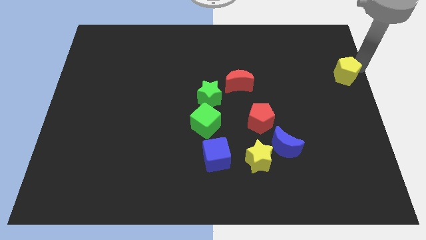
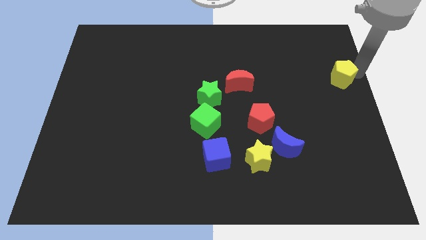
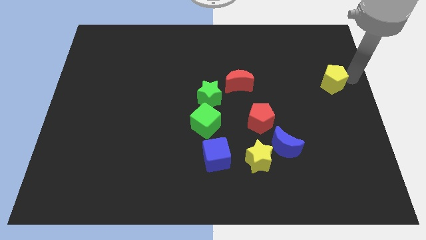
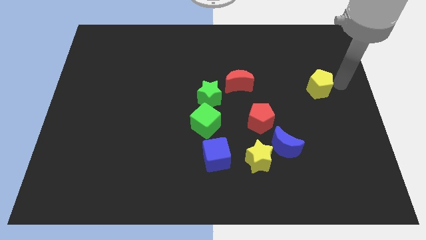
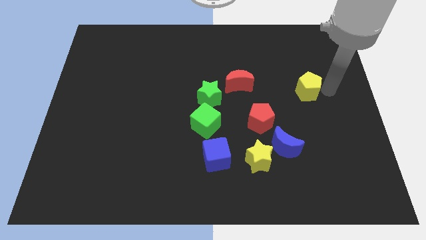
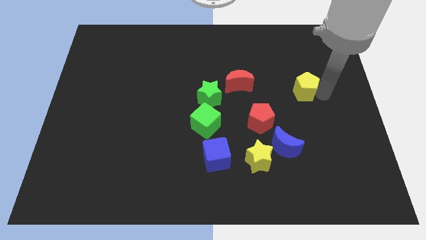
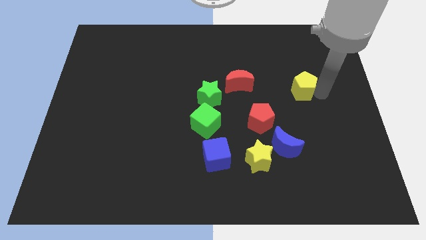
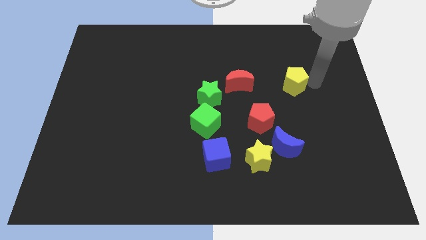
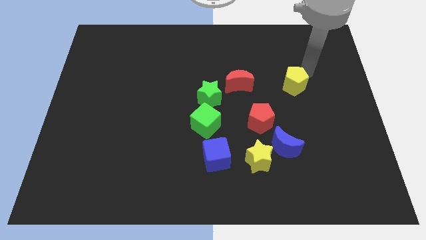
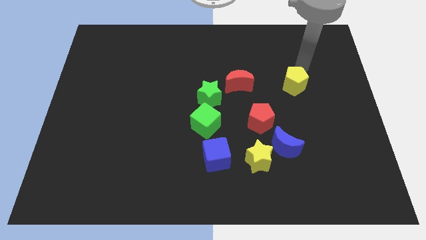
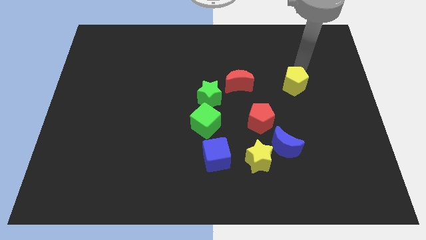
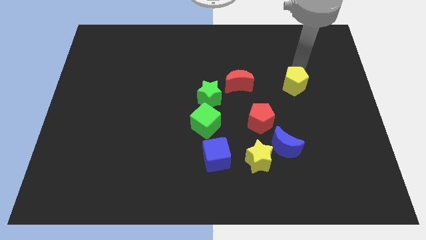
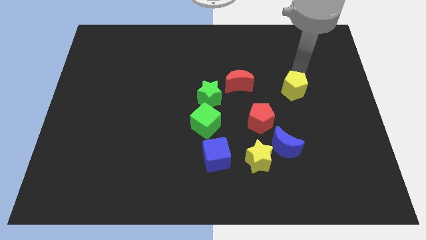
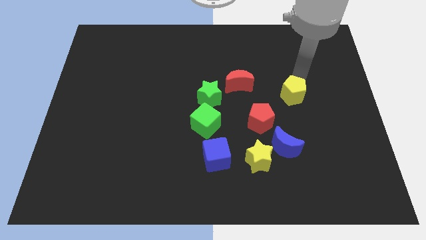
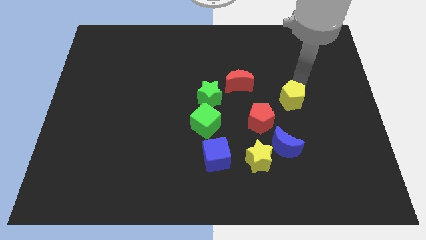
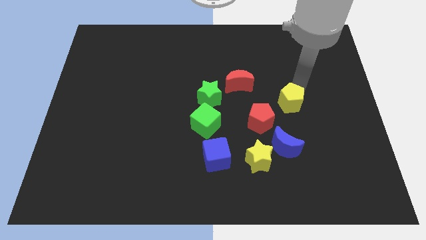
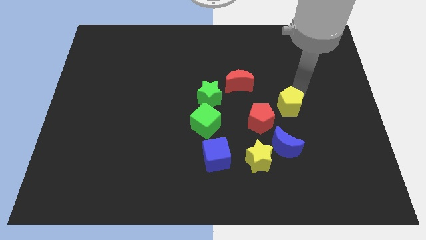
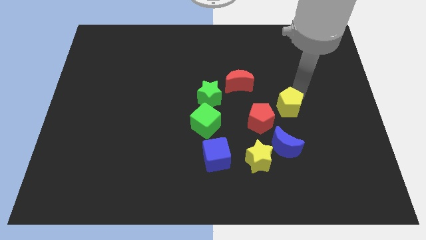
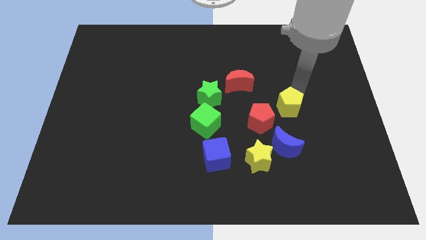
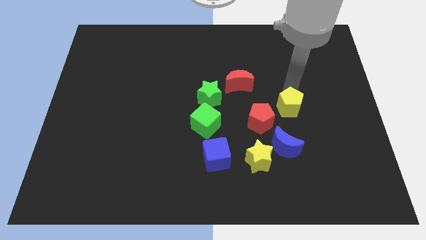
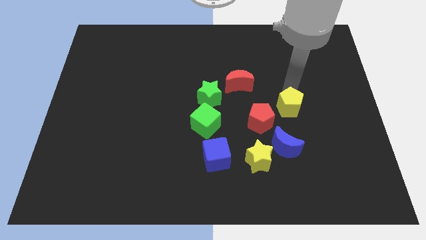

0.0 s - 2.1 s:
move the yellow pentagon towards the red pentagon

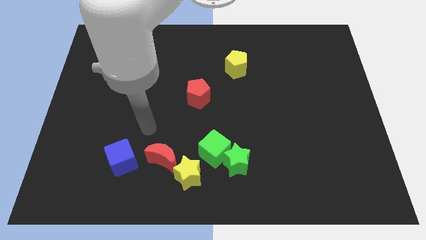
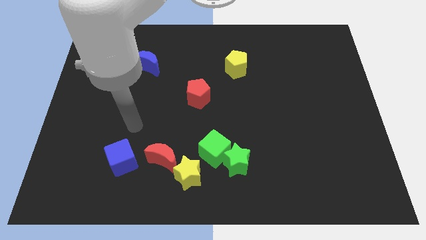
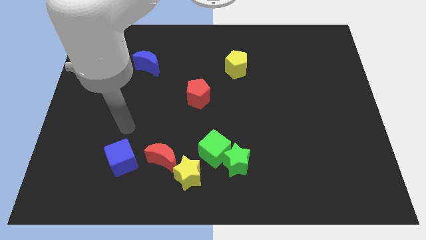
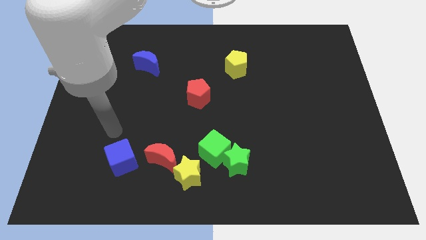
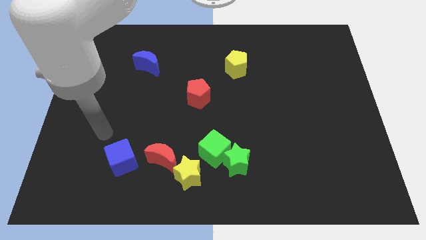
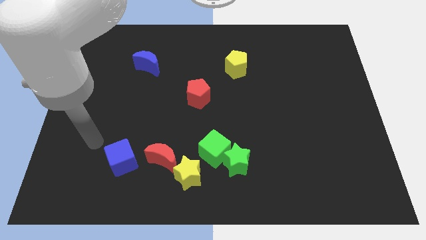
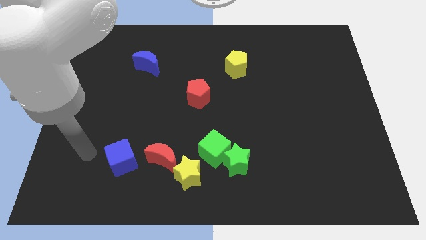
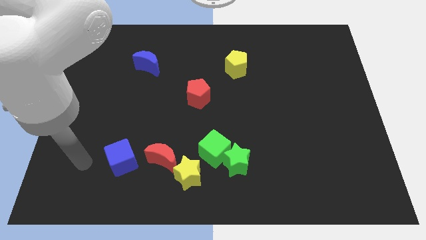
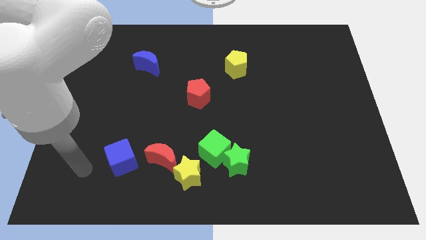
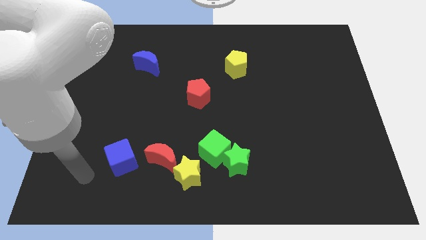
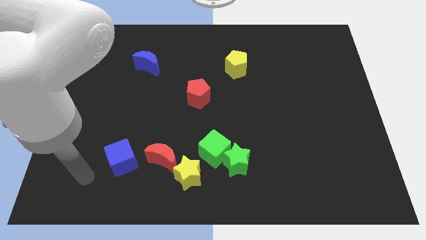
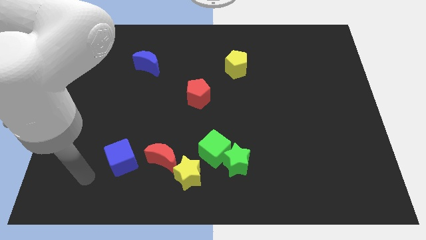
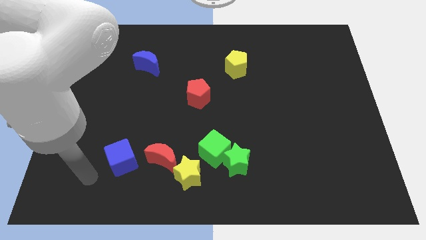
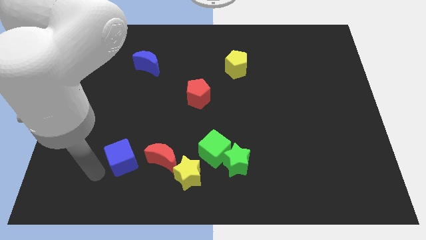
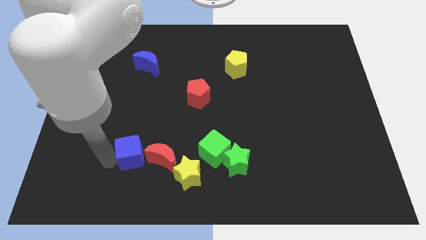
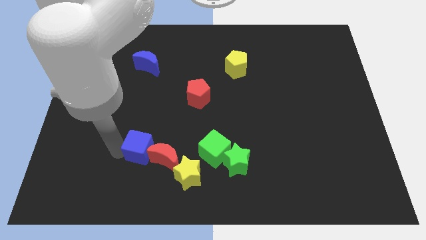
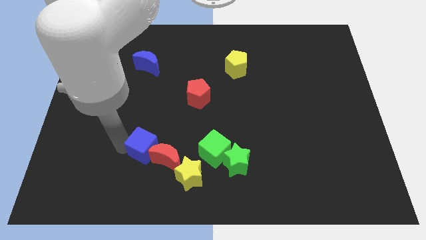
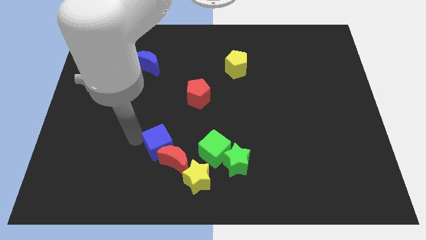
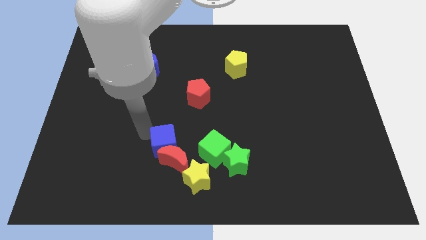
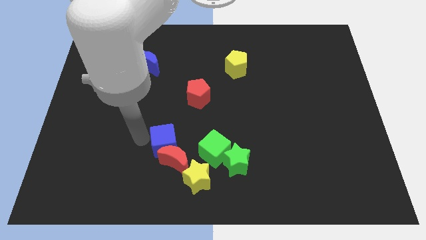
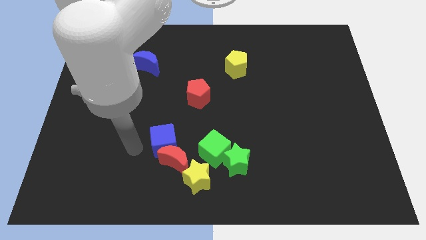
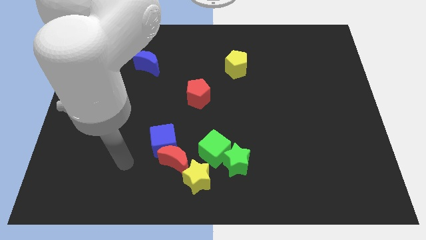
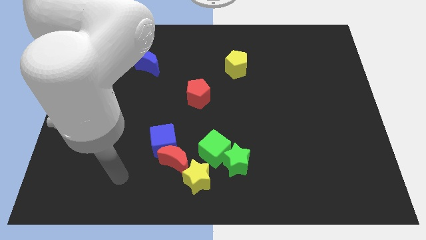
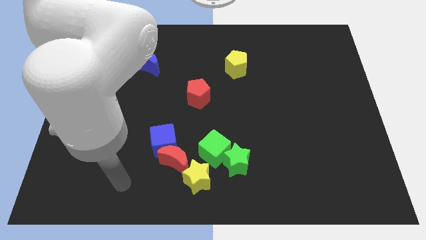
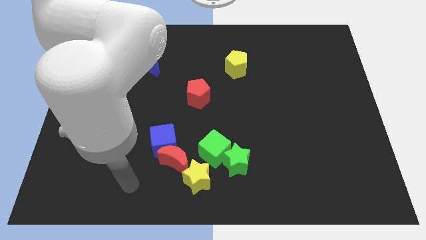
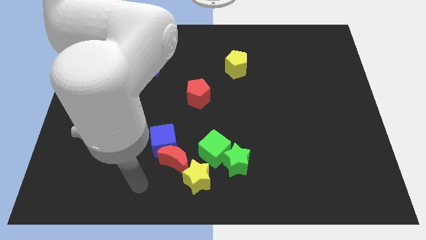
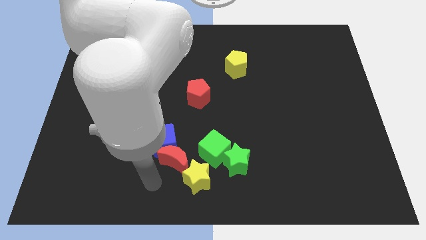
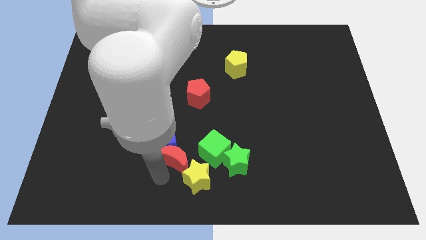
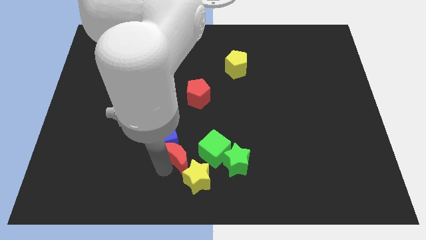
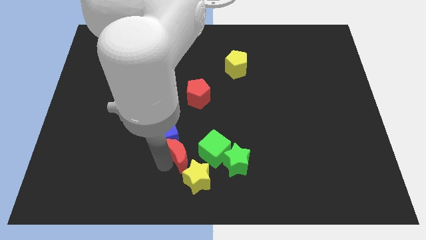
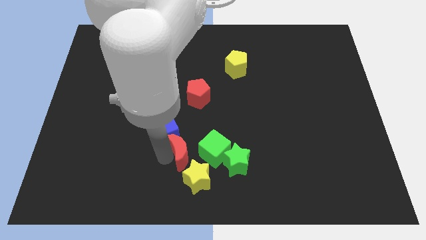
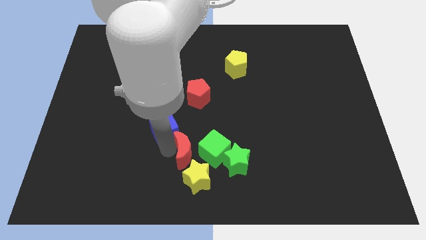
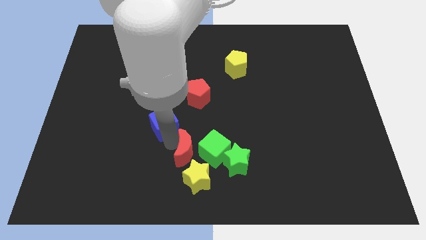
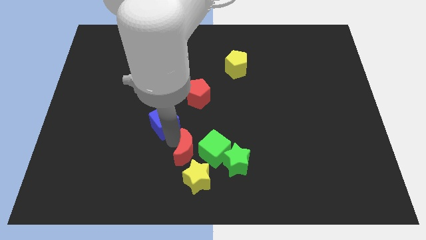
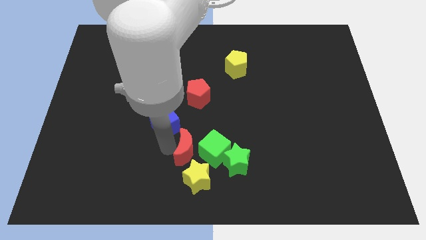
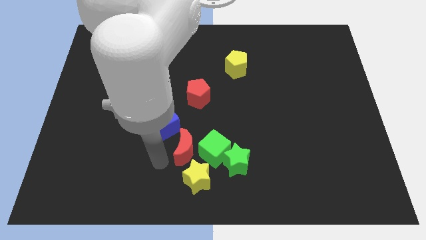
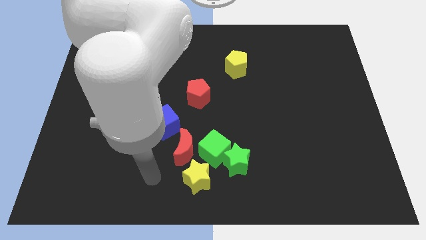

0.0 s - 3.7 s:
move the blue cube and red moon slightly to the top side of the board

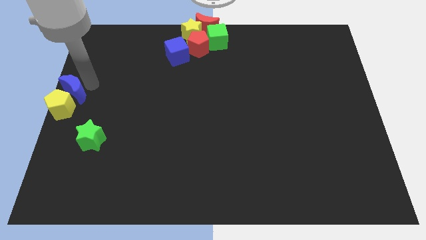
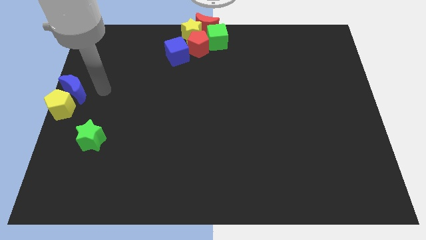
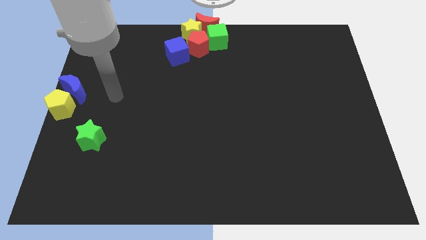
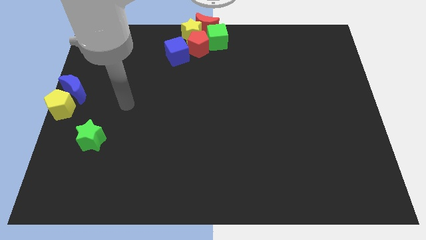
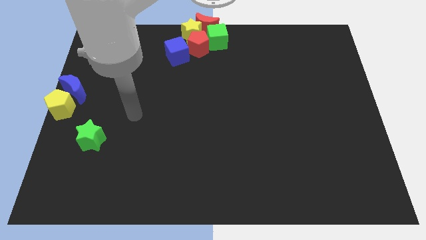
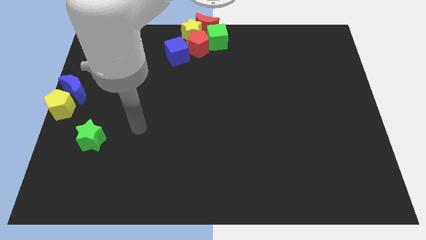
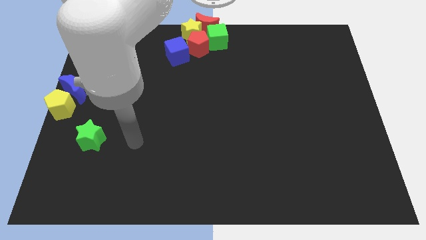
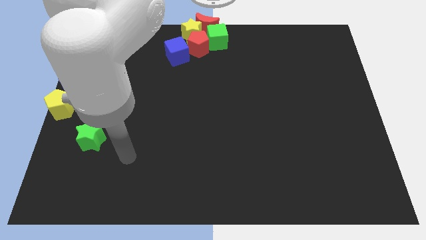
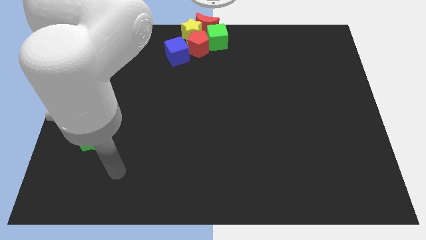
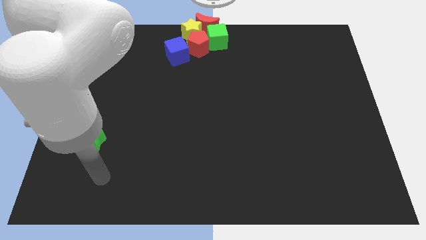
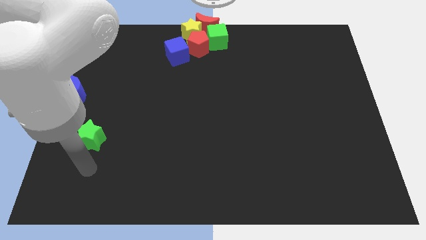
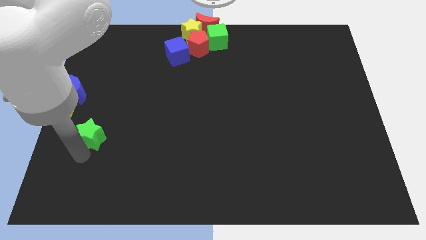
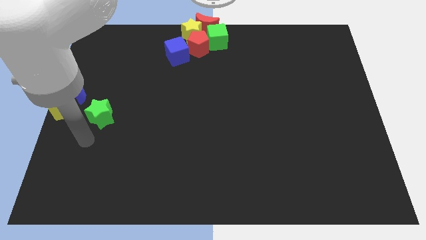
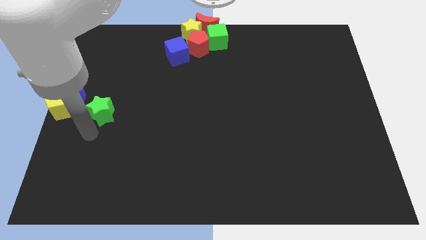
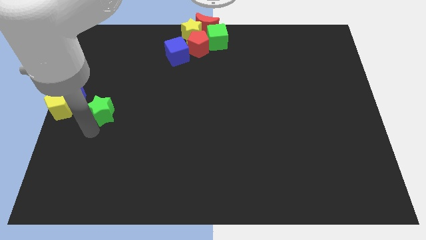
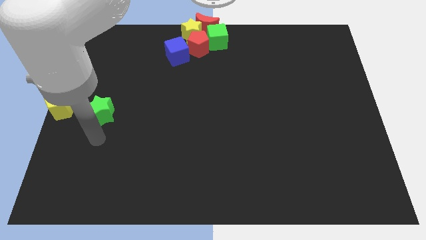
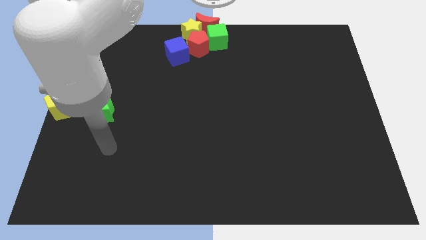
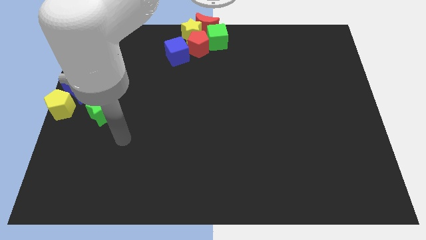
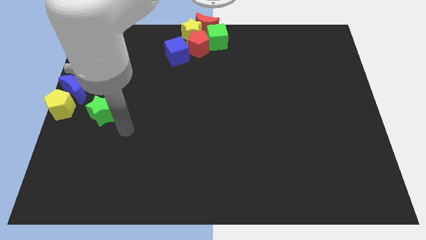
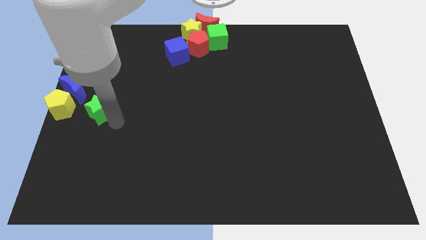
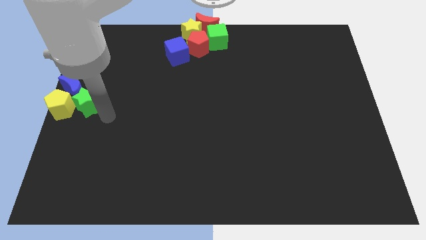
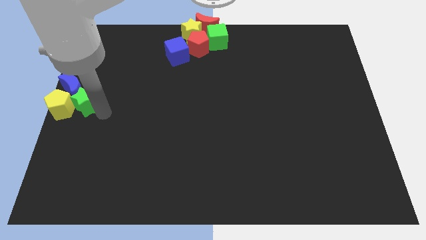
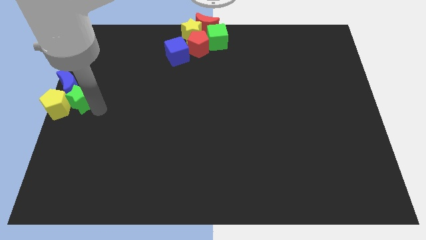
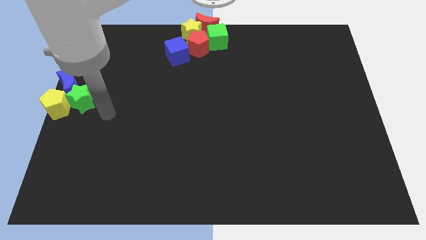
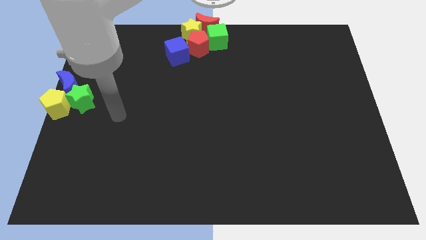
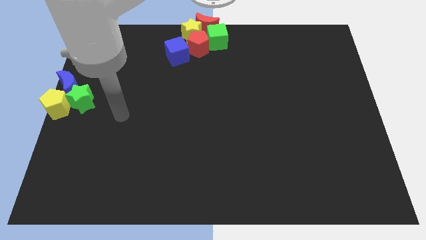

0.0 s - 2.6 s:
move green star towards yellow pentagon

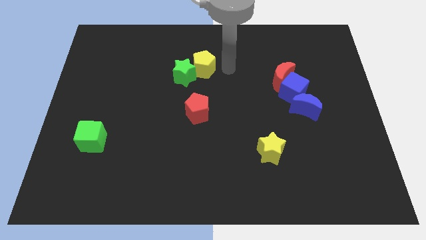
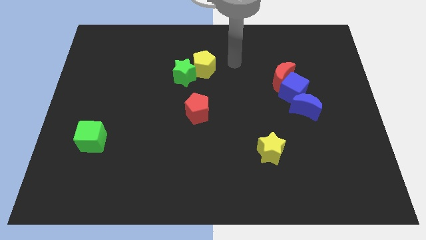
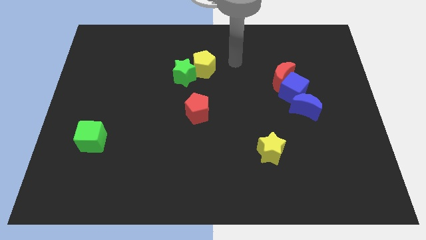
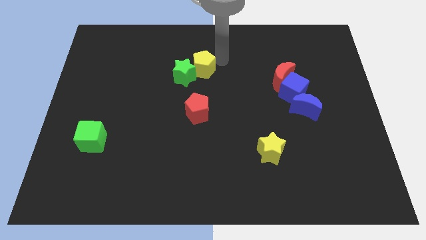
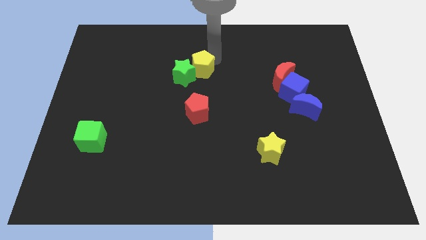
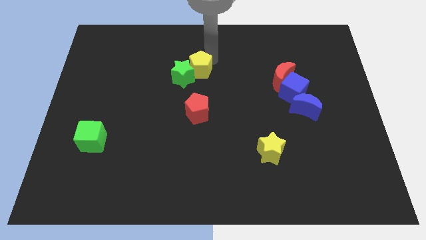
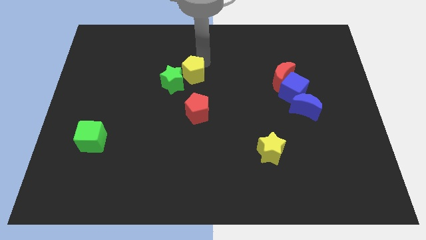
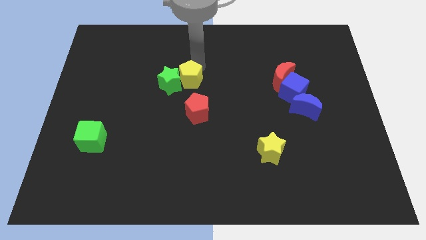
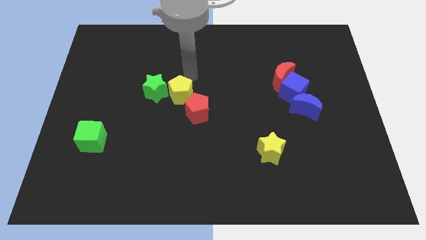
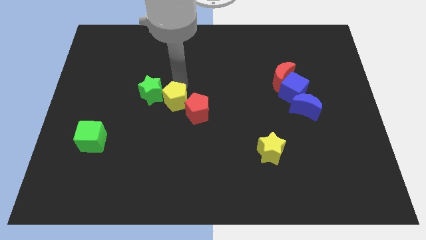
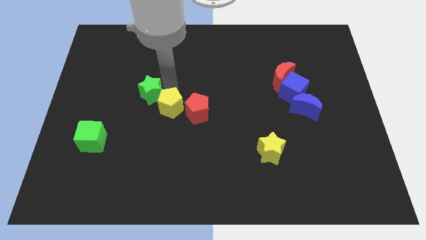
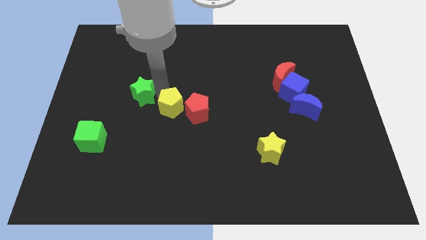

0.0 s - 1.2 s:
place the yellow pentagon in between the red pentagon and the green star
